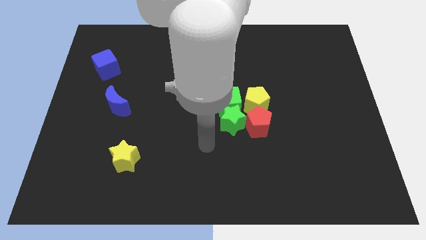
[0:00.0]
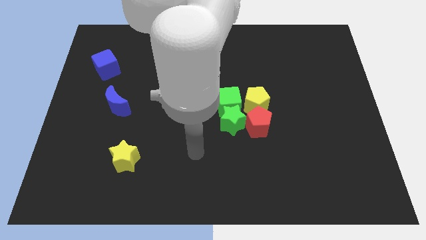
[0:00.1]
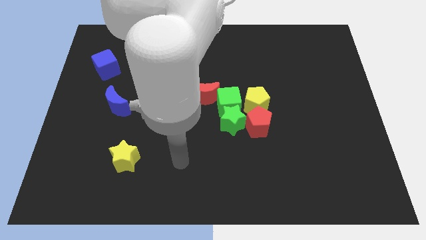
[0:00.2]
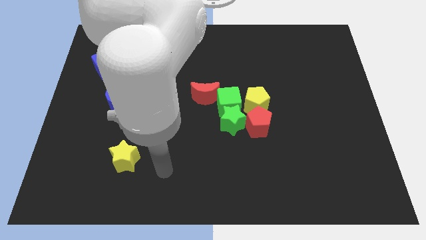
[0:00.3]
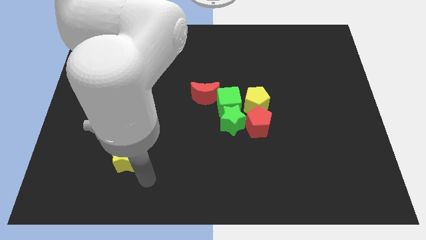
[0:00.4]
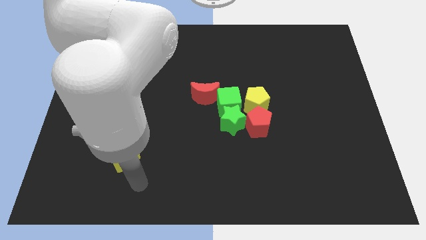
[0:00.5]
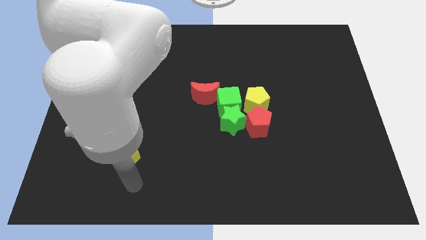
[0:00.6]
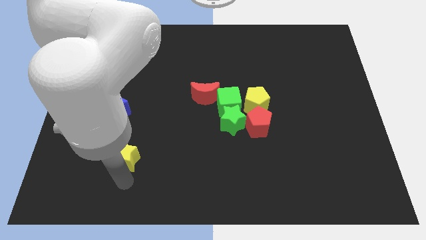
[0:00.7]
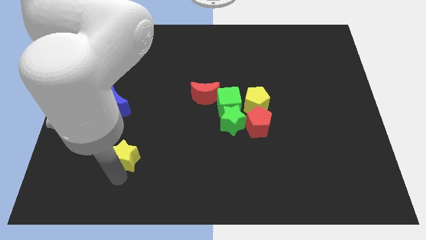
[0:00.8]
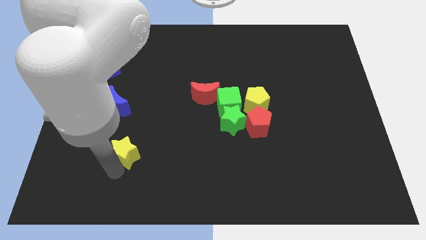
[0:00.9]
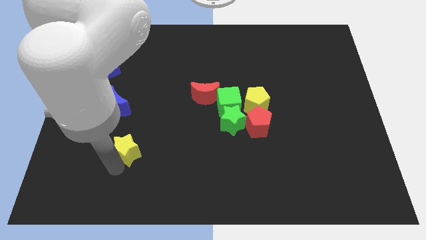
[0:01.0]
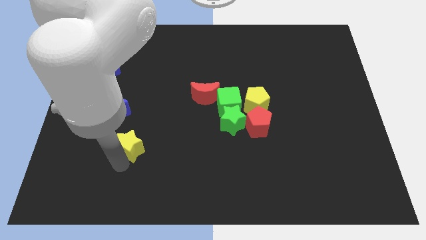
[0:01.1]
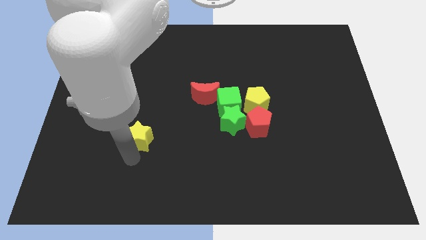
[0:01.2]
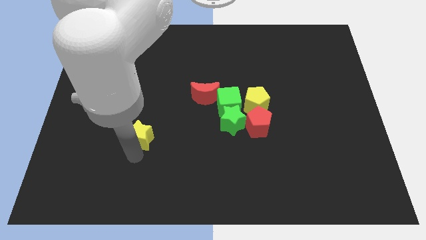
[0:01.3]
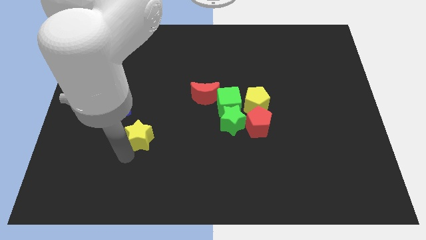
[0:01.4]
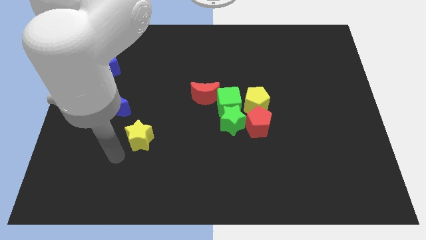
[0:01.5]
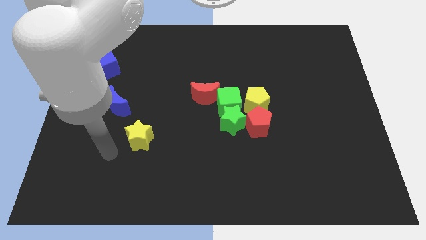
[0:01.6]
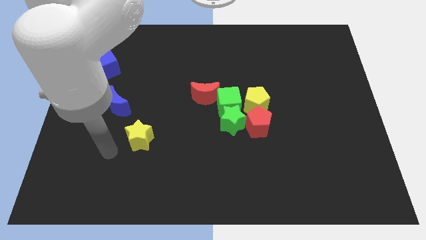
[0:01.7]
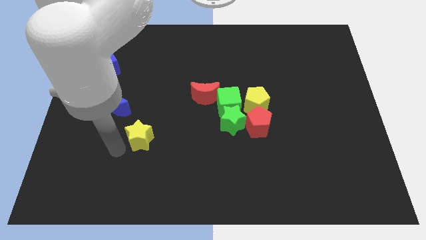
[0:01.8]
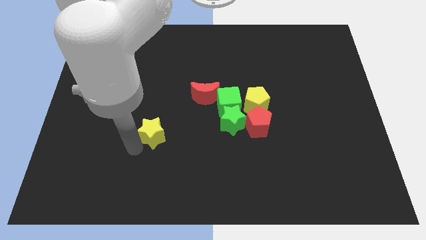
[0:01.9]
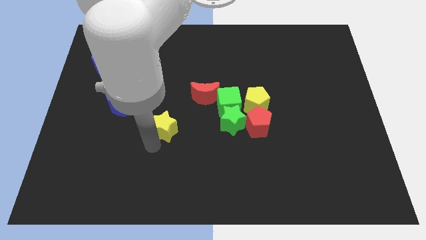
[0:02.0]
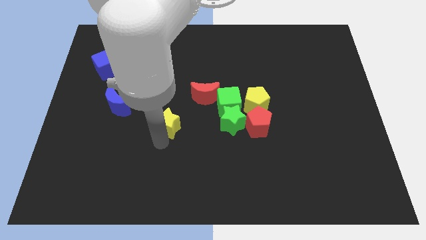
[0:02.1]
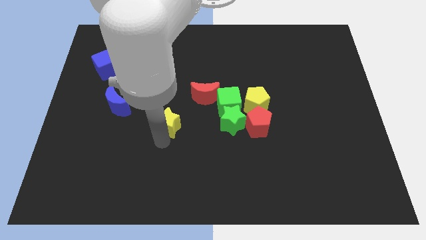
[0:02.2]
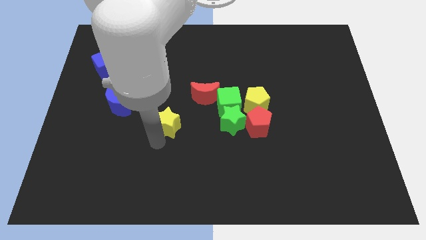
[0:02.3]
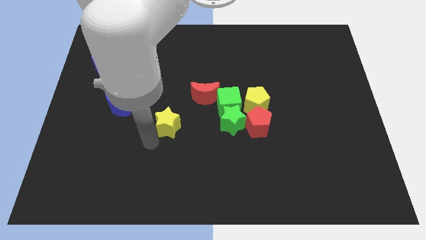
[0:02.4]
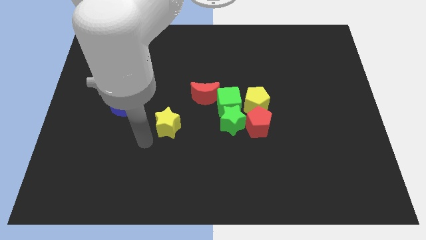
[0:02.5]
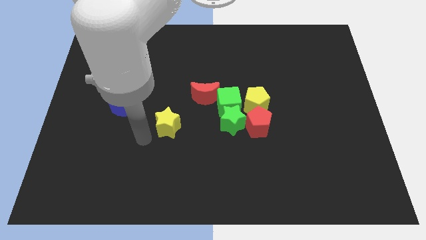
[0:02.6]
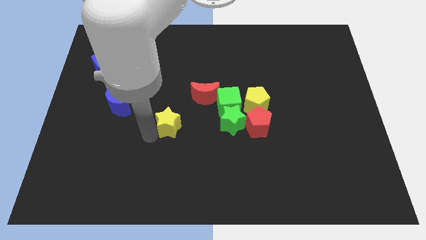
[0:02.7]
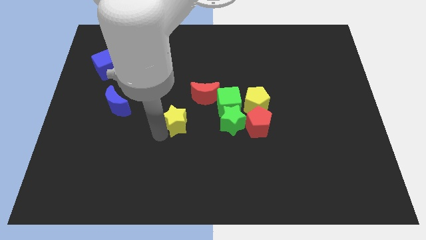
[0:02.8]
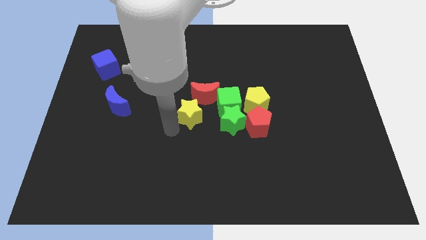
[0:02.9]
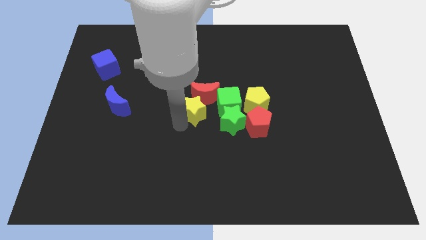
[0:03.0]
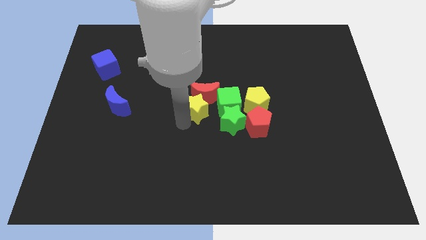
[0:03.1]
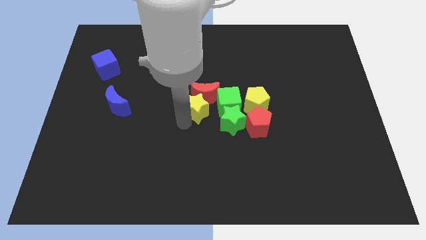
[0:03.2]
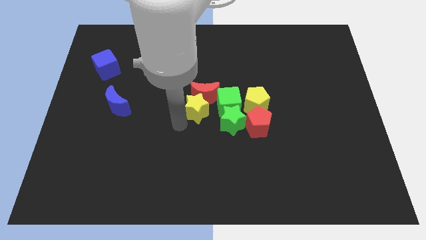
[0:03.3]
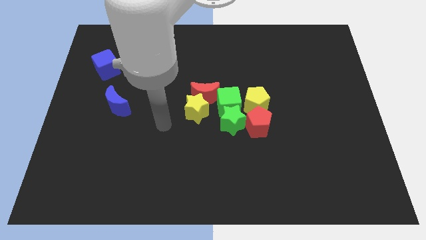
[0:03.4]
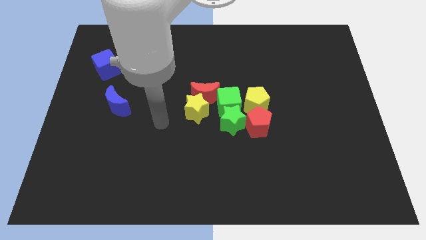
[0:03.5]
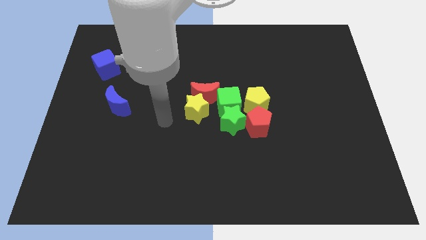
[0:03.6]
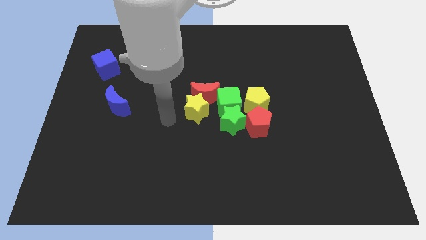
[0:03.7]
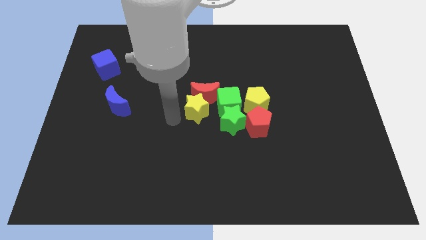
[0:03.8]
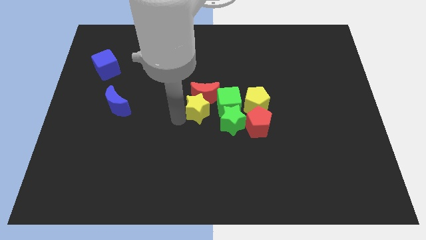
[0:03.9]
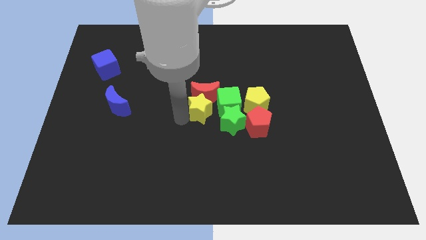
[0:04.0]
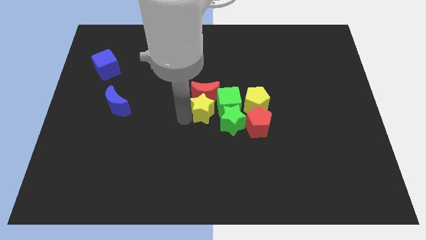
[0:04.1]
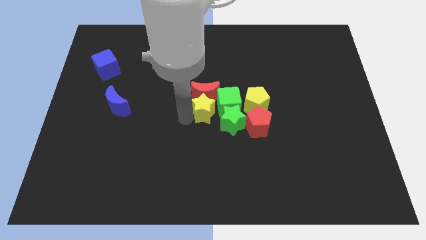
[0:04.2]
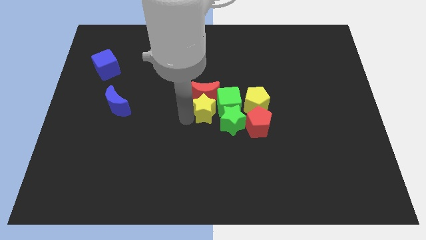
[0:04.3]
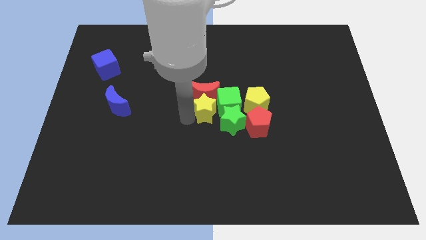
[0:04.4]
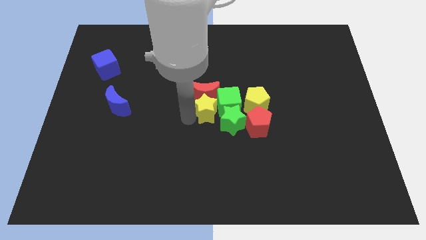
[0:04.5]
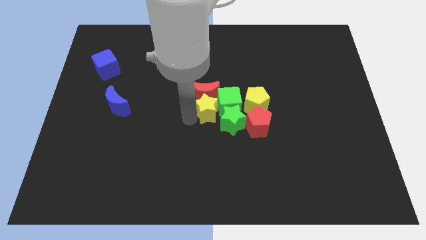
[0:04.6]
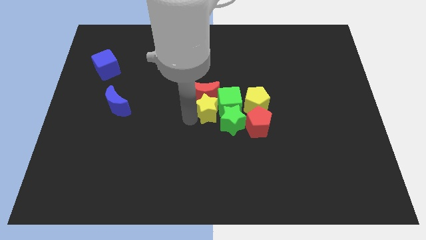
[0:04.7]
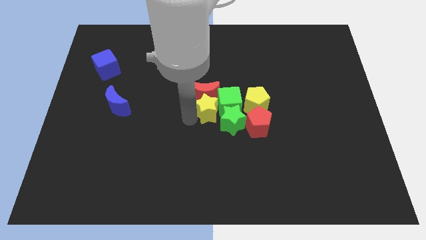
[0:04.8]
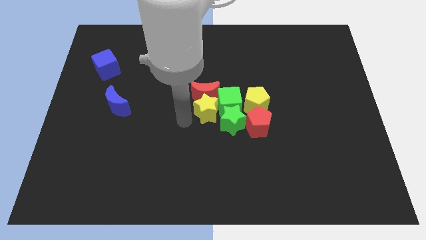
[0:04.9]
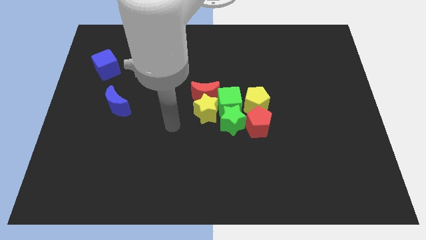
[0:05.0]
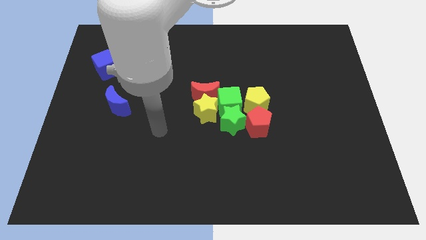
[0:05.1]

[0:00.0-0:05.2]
push the yellow star into the green cube

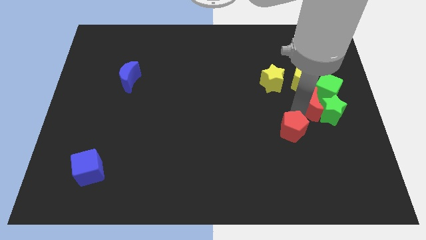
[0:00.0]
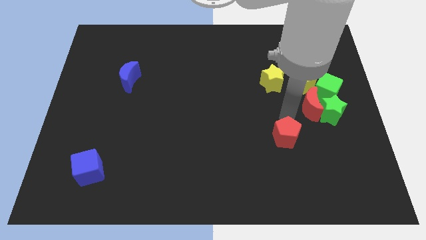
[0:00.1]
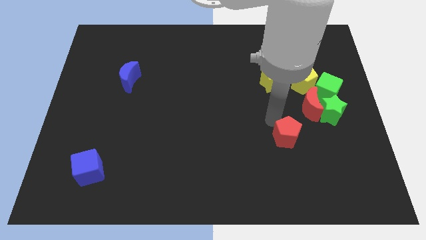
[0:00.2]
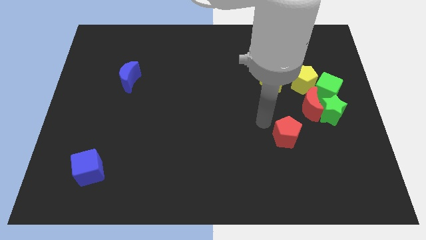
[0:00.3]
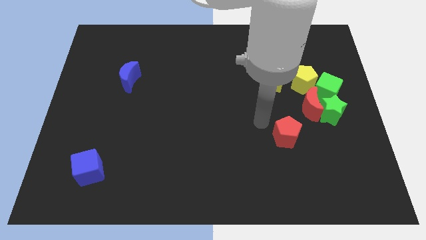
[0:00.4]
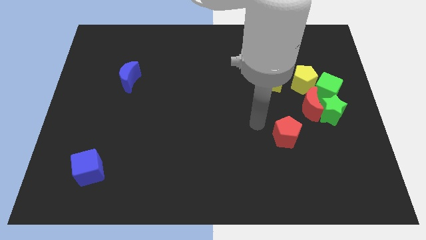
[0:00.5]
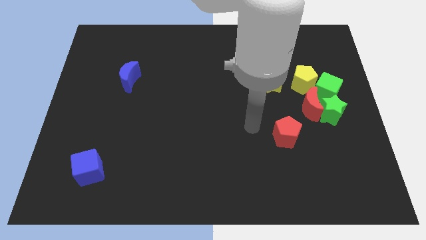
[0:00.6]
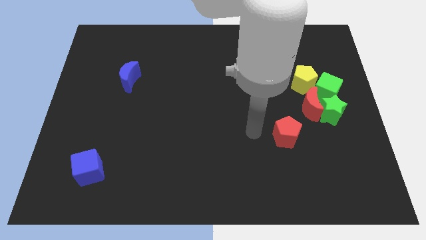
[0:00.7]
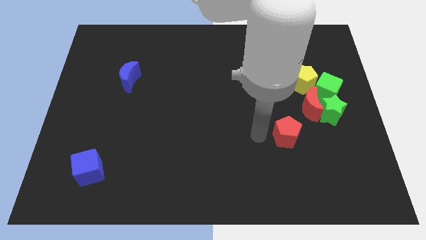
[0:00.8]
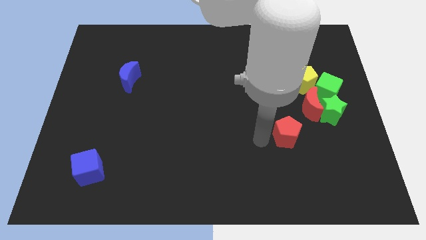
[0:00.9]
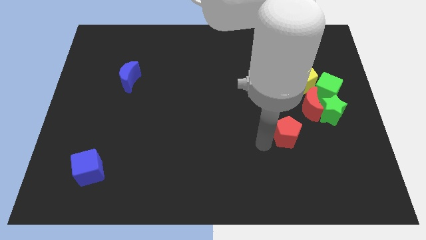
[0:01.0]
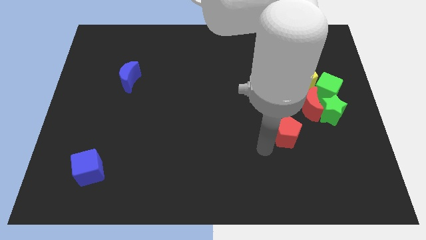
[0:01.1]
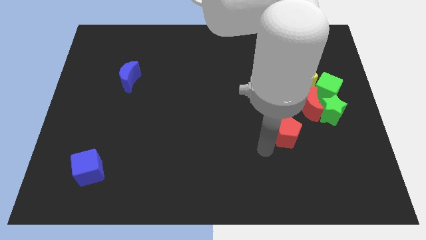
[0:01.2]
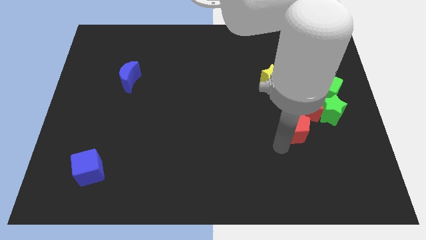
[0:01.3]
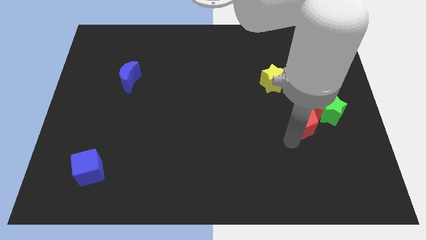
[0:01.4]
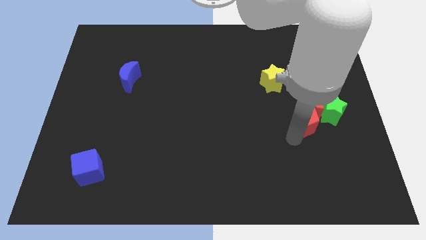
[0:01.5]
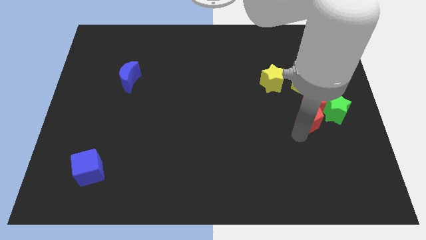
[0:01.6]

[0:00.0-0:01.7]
move the red pentagon towards the red moon

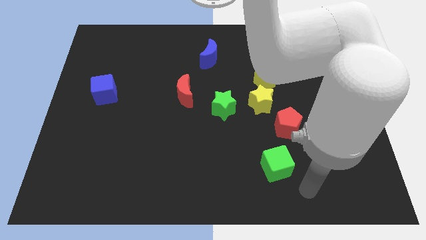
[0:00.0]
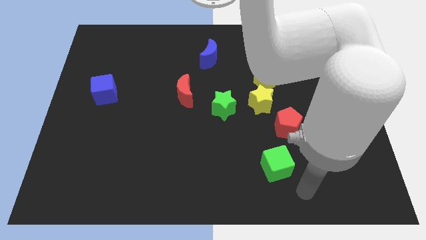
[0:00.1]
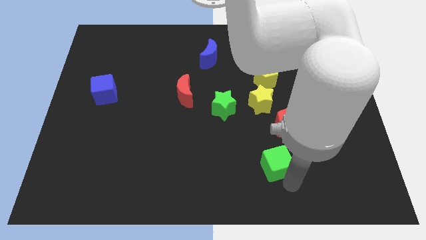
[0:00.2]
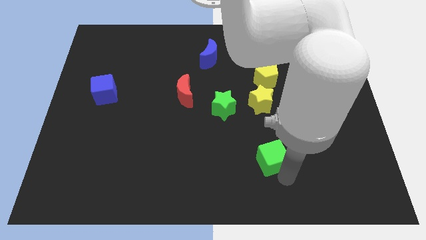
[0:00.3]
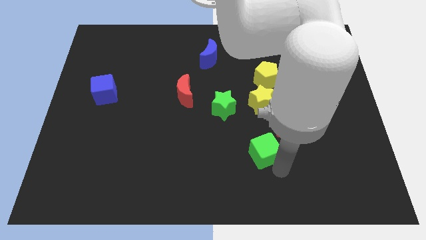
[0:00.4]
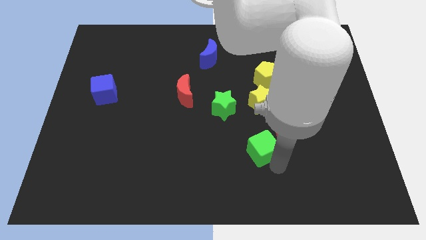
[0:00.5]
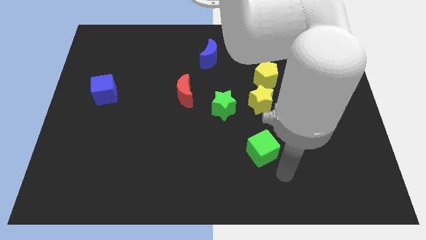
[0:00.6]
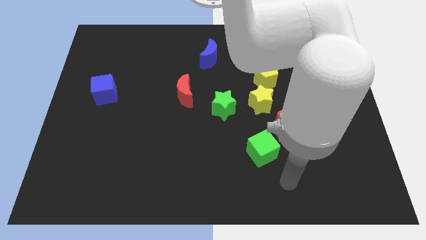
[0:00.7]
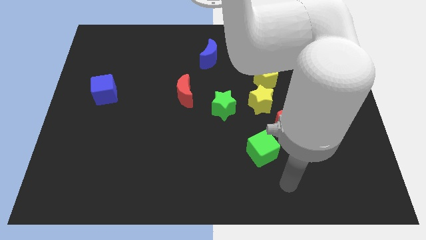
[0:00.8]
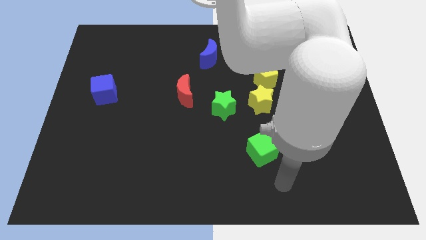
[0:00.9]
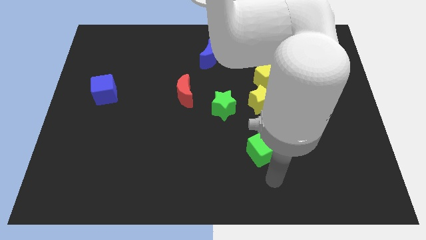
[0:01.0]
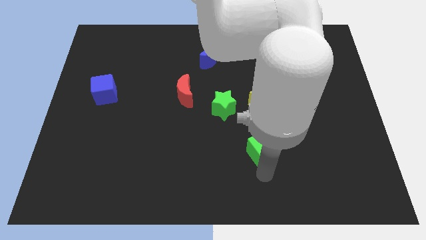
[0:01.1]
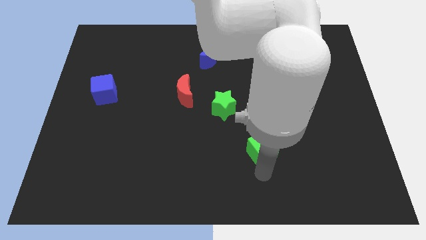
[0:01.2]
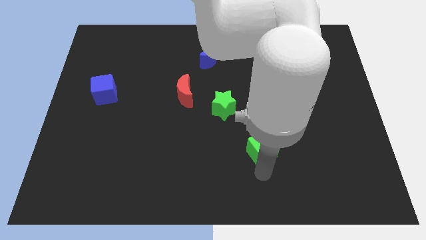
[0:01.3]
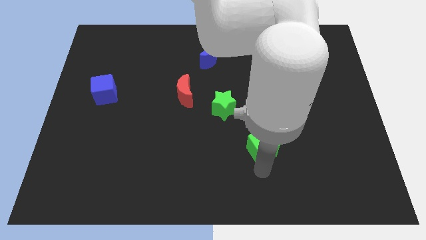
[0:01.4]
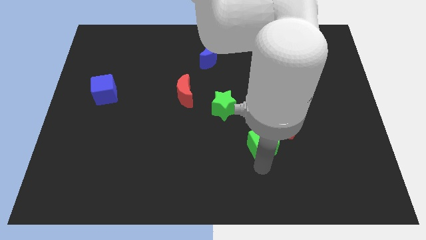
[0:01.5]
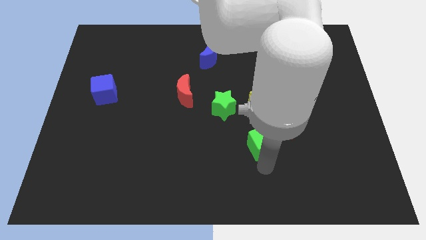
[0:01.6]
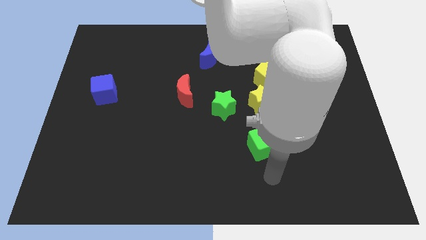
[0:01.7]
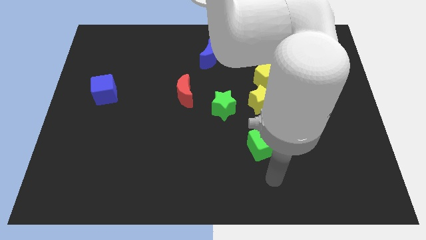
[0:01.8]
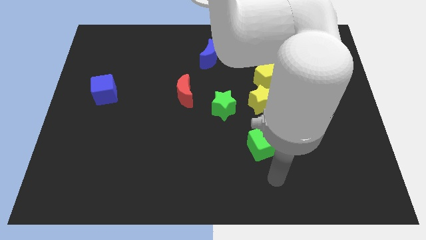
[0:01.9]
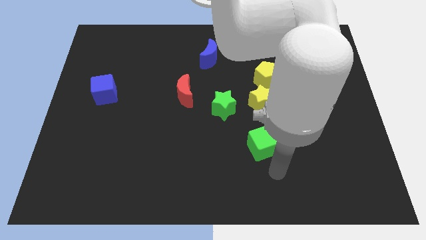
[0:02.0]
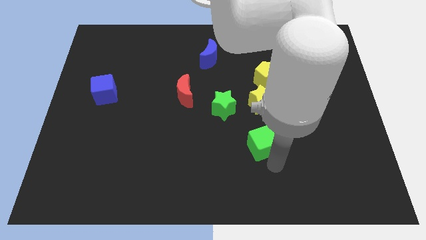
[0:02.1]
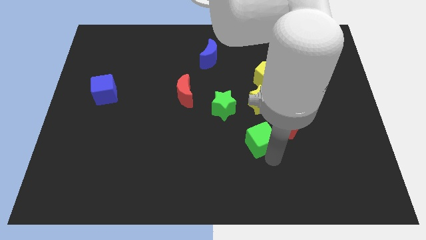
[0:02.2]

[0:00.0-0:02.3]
move the green cube to the bottom right of the board
